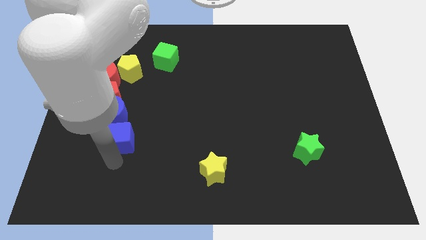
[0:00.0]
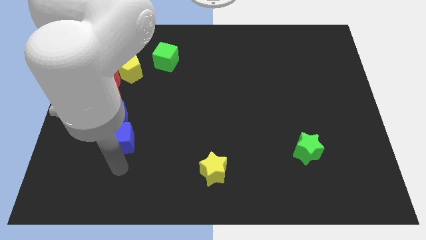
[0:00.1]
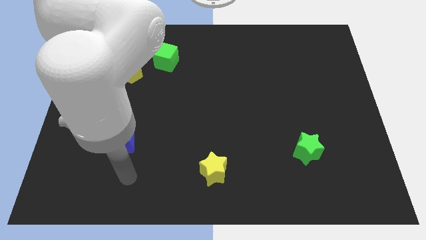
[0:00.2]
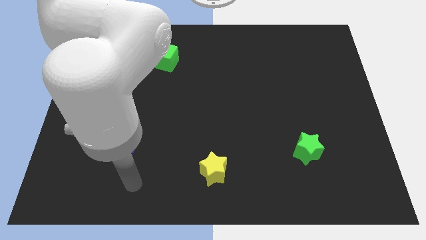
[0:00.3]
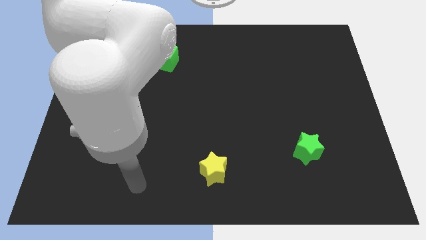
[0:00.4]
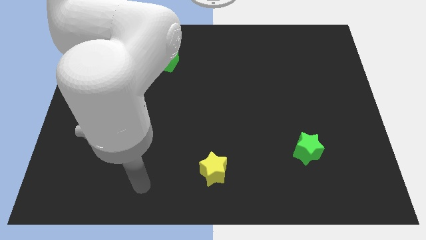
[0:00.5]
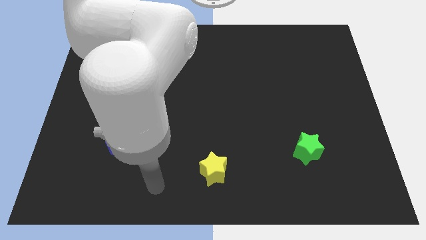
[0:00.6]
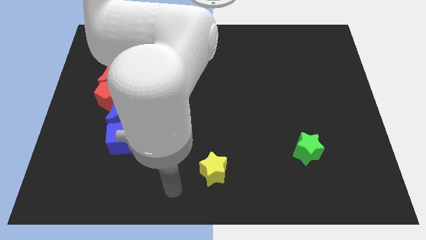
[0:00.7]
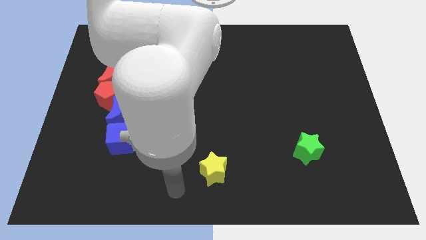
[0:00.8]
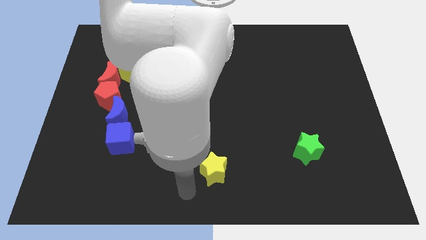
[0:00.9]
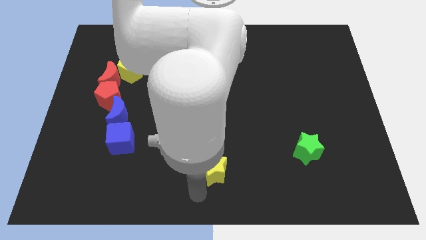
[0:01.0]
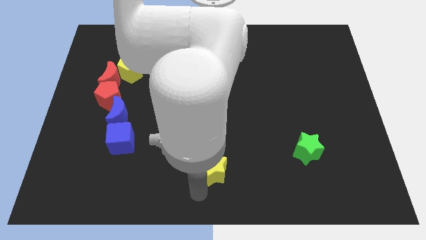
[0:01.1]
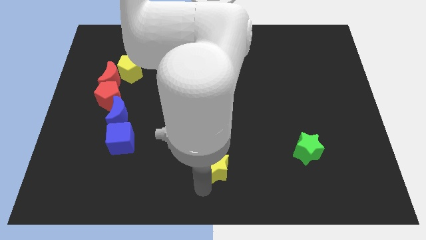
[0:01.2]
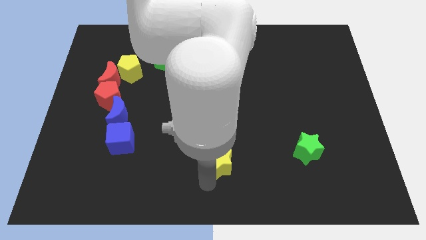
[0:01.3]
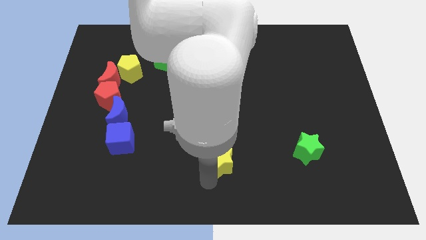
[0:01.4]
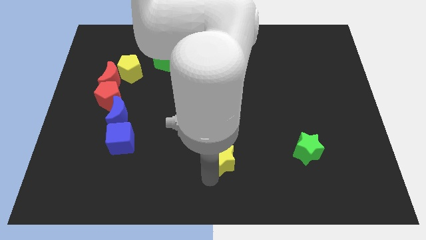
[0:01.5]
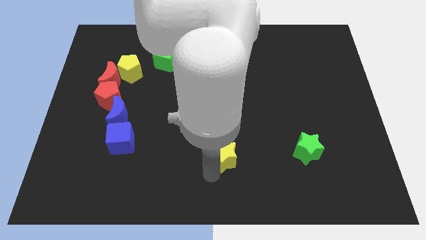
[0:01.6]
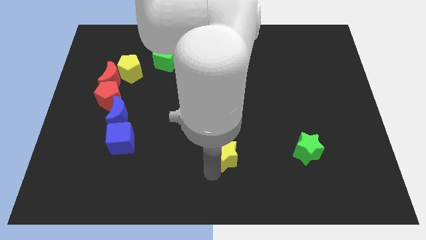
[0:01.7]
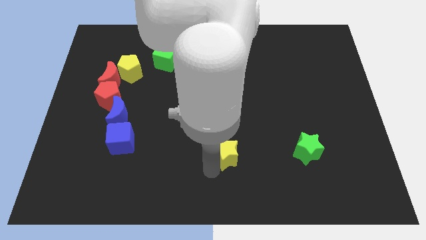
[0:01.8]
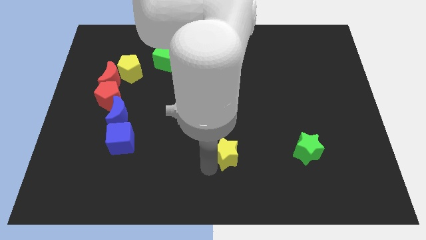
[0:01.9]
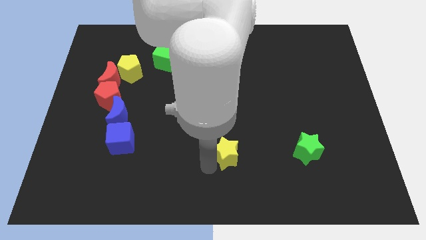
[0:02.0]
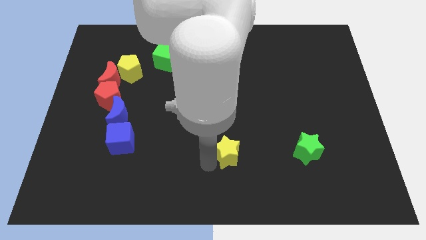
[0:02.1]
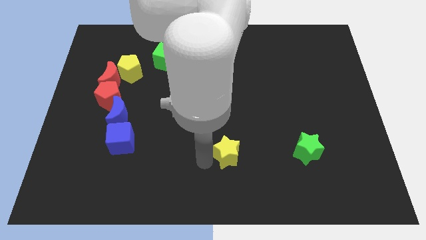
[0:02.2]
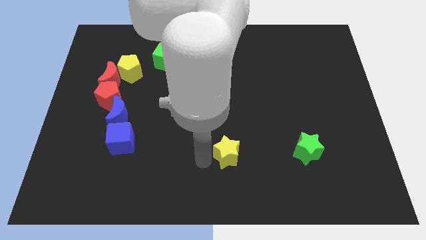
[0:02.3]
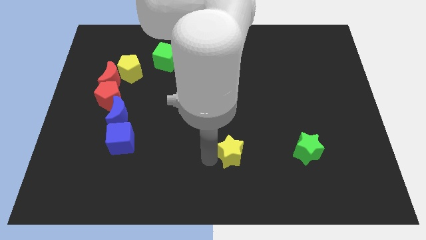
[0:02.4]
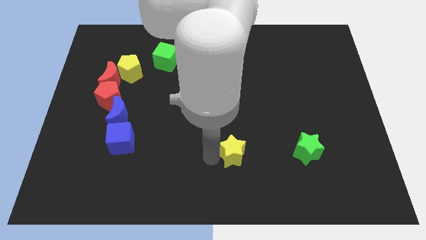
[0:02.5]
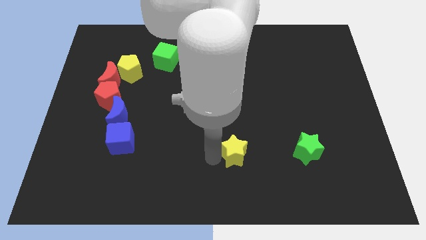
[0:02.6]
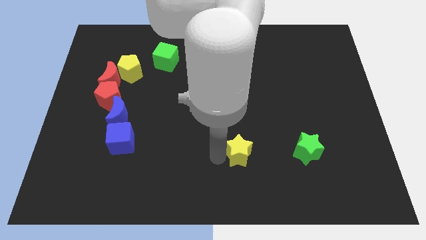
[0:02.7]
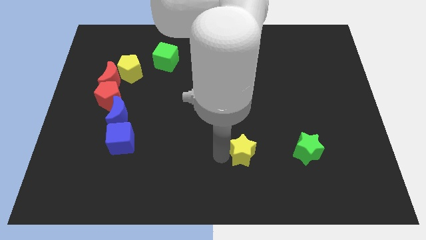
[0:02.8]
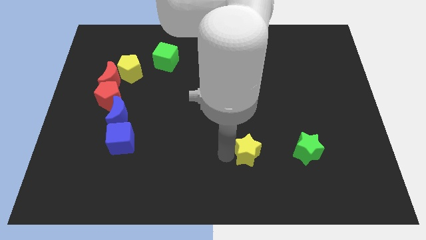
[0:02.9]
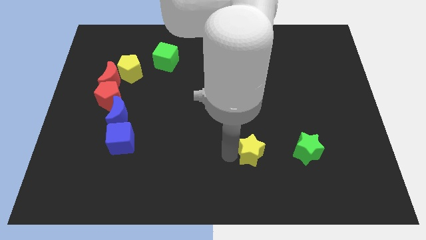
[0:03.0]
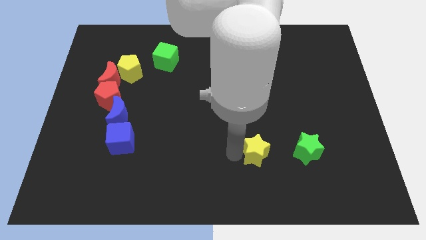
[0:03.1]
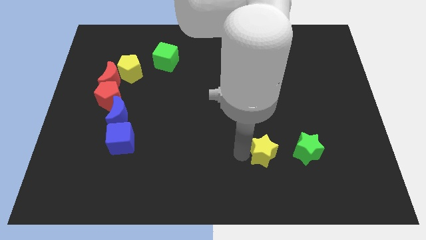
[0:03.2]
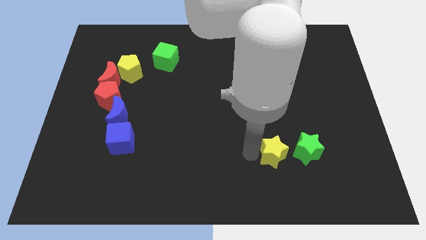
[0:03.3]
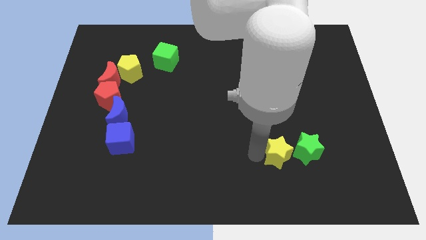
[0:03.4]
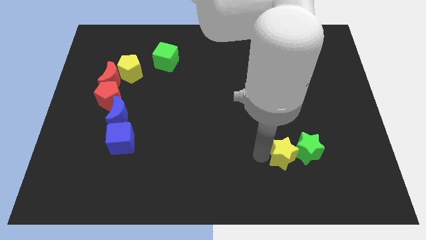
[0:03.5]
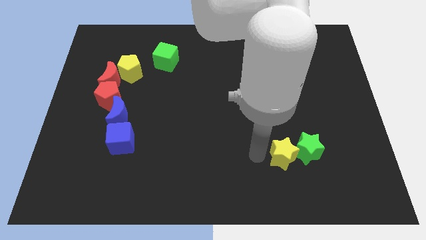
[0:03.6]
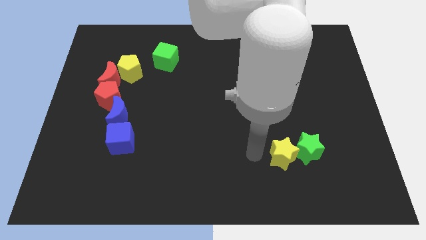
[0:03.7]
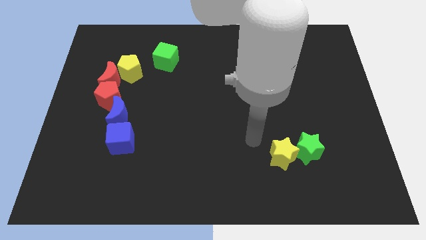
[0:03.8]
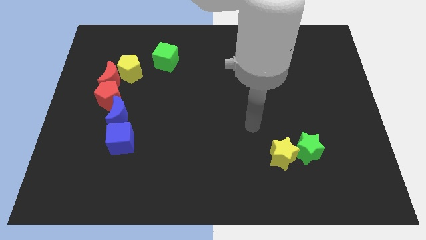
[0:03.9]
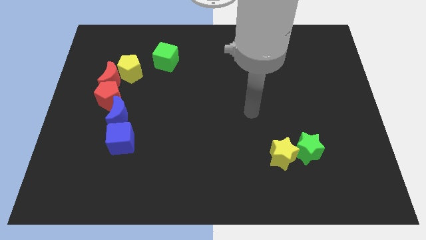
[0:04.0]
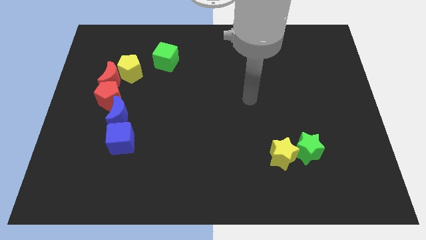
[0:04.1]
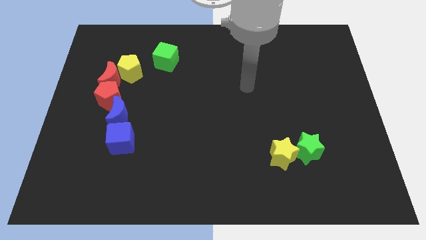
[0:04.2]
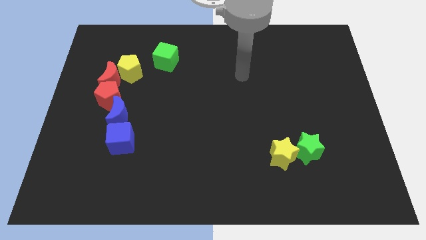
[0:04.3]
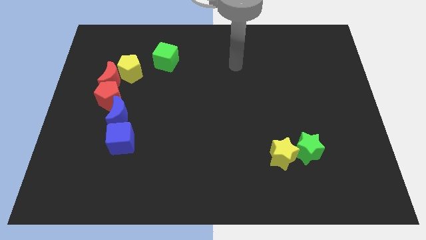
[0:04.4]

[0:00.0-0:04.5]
move the yellow star to the left of the green star

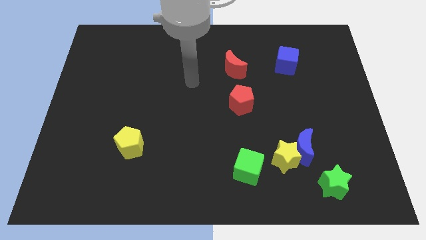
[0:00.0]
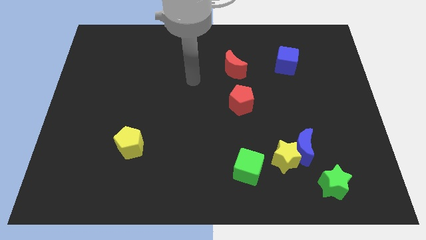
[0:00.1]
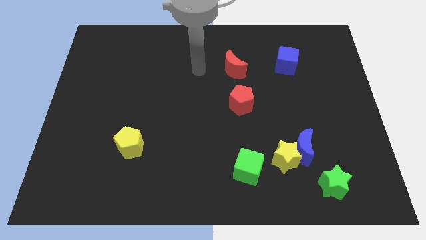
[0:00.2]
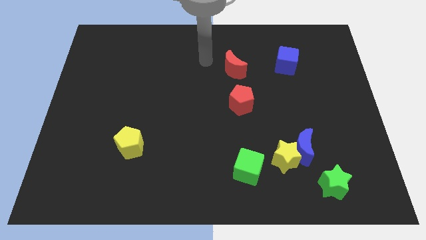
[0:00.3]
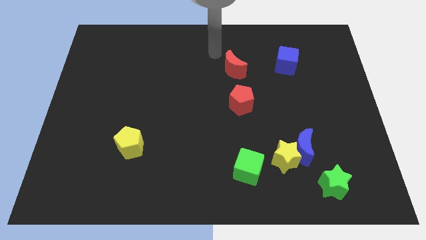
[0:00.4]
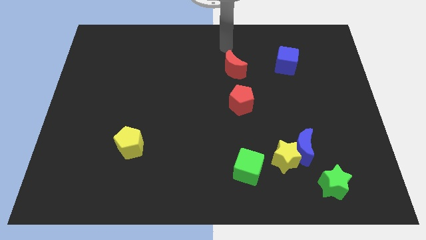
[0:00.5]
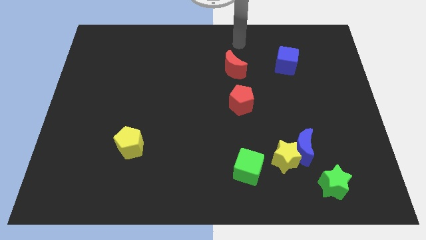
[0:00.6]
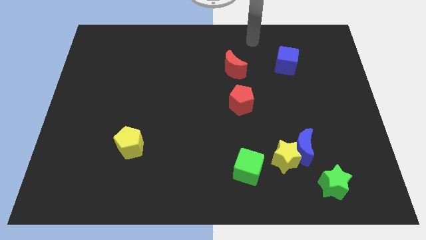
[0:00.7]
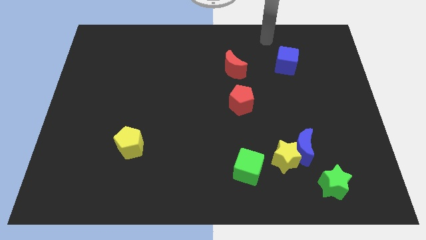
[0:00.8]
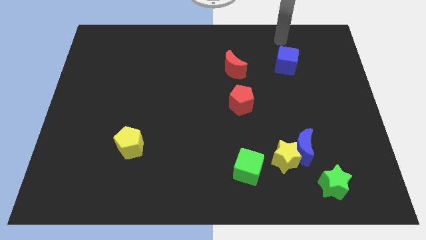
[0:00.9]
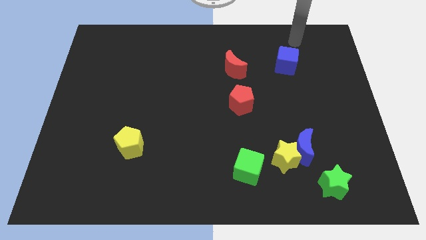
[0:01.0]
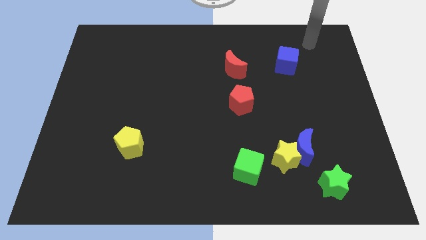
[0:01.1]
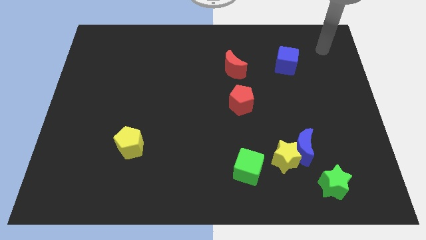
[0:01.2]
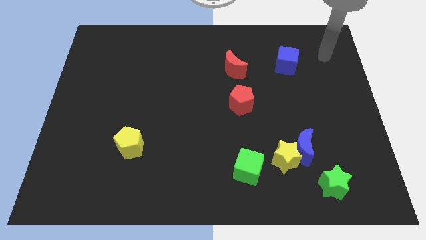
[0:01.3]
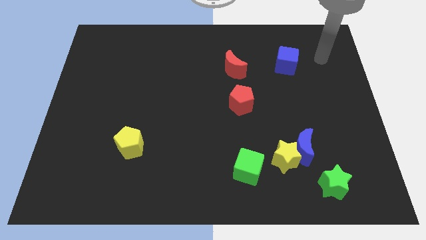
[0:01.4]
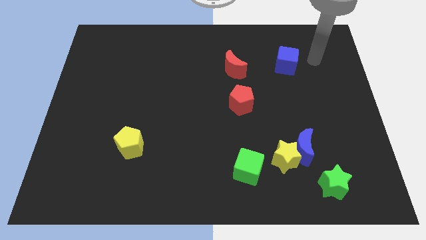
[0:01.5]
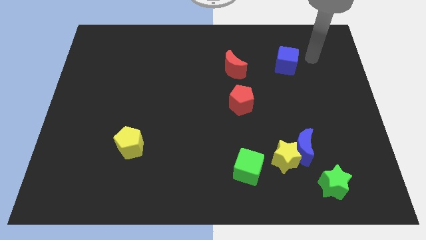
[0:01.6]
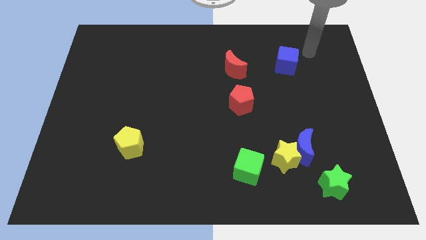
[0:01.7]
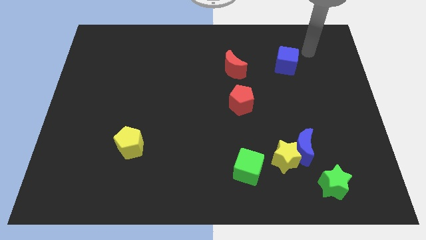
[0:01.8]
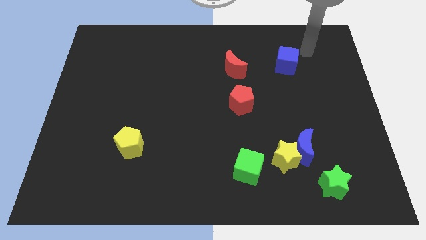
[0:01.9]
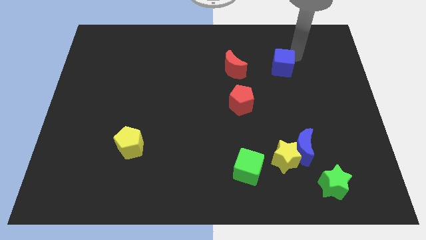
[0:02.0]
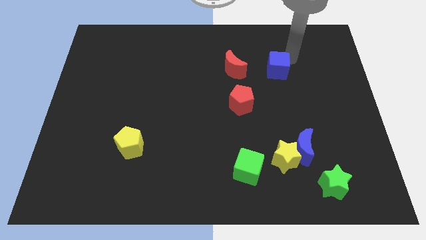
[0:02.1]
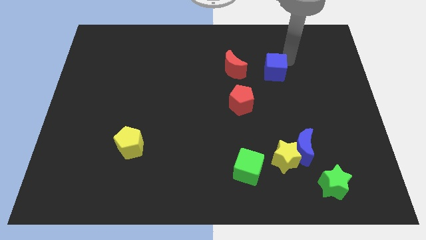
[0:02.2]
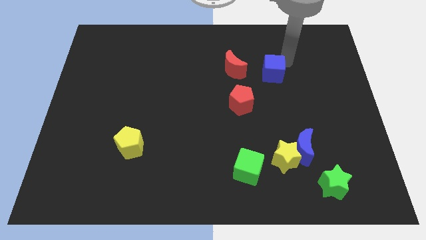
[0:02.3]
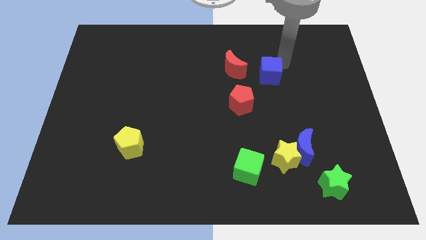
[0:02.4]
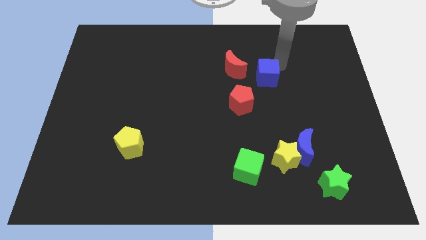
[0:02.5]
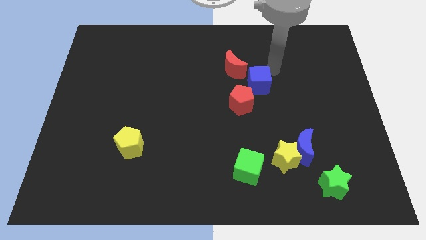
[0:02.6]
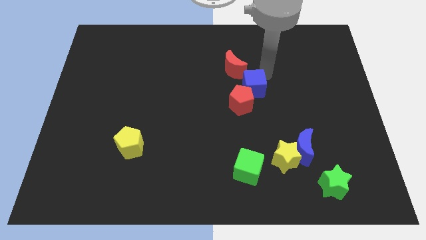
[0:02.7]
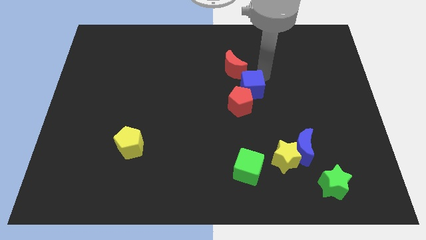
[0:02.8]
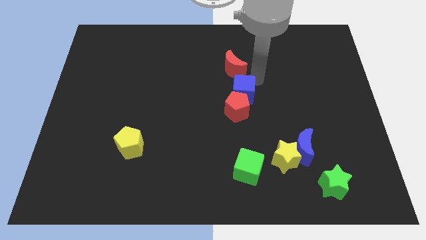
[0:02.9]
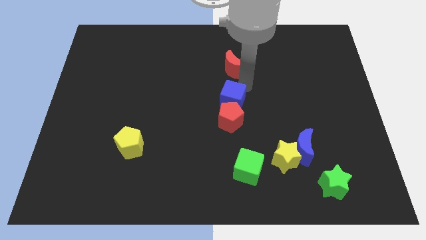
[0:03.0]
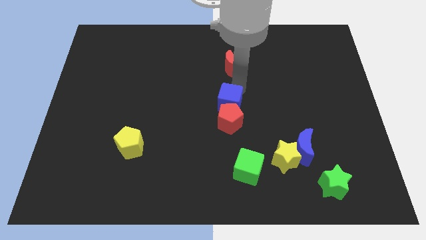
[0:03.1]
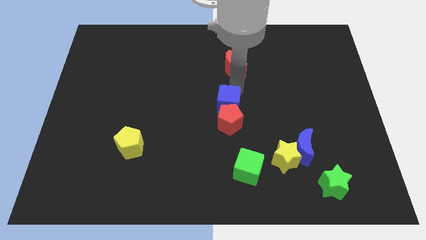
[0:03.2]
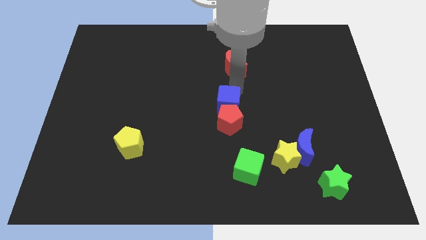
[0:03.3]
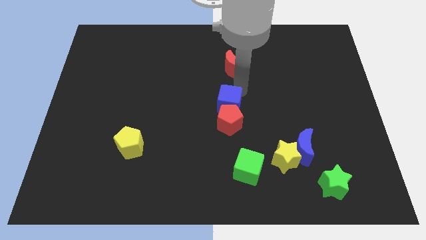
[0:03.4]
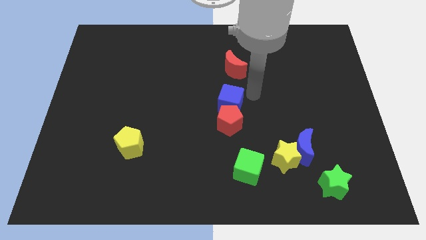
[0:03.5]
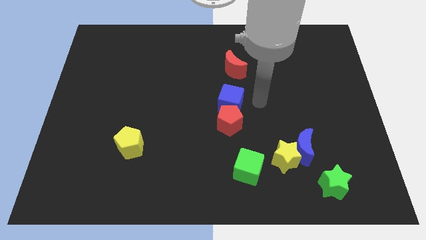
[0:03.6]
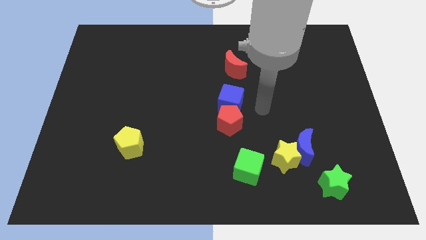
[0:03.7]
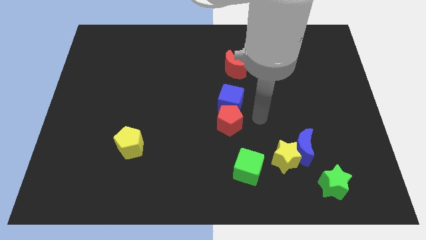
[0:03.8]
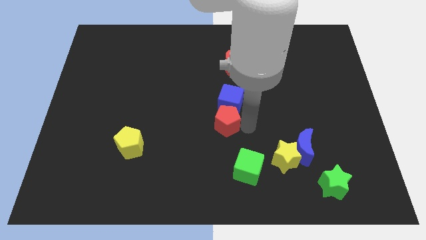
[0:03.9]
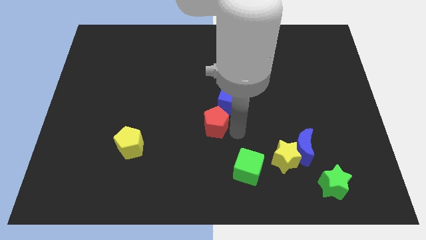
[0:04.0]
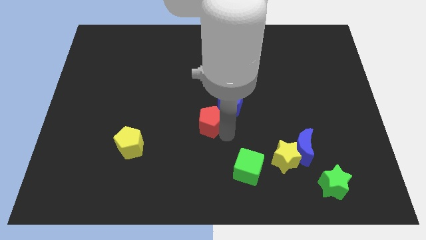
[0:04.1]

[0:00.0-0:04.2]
move the blue cube into the red pentagon
